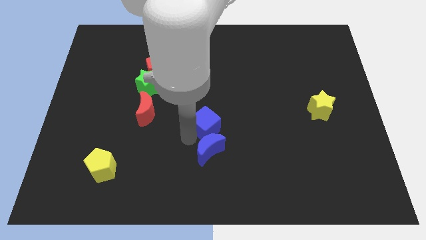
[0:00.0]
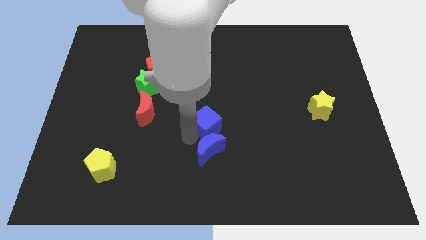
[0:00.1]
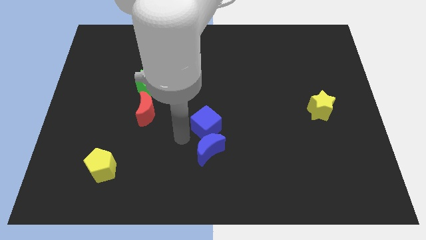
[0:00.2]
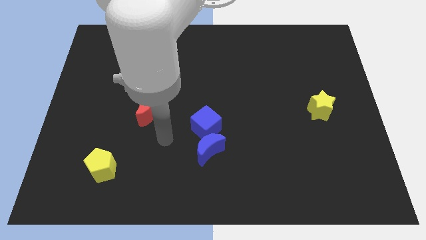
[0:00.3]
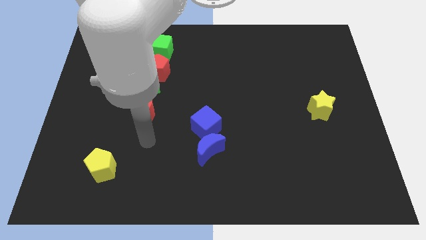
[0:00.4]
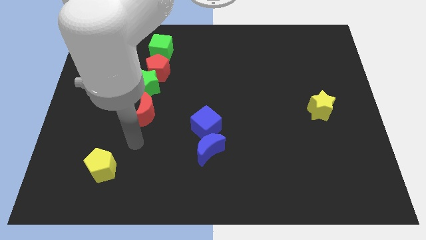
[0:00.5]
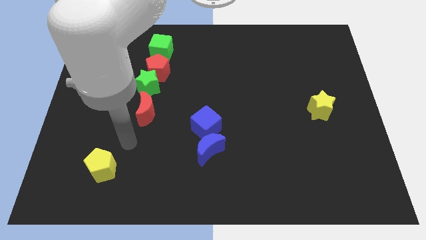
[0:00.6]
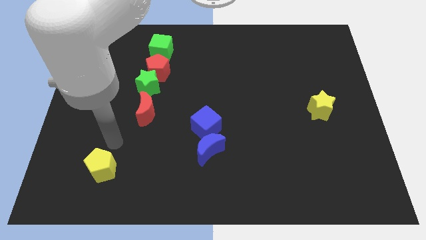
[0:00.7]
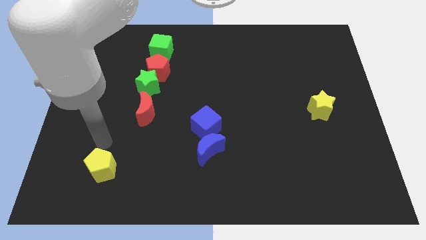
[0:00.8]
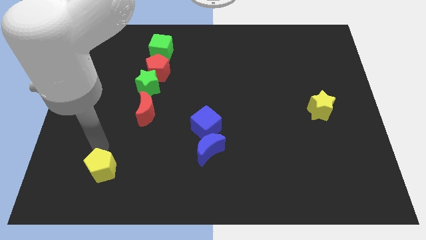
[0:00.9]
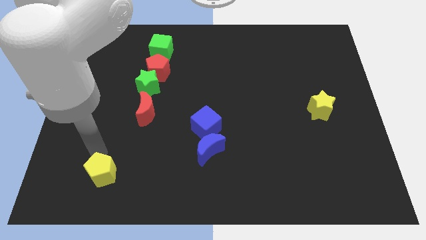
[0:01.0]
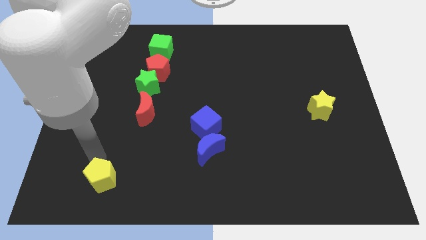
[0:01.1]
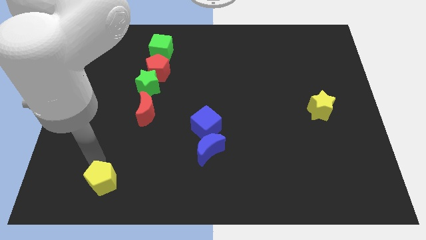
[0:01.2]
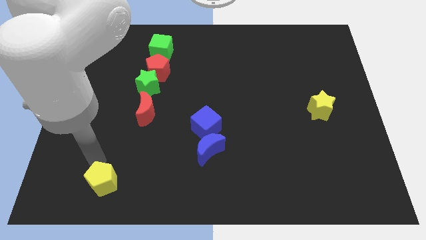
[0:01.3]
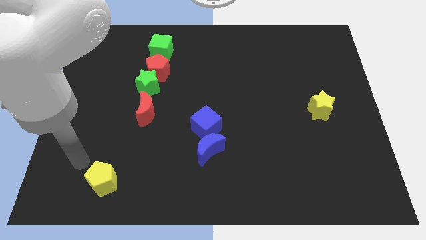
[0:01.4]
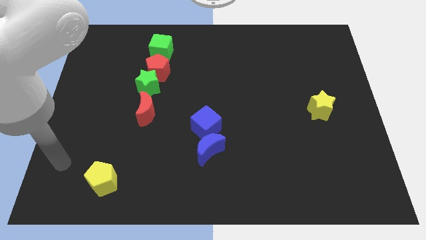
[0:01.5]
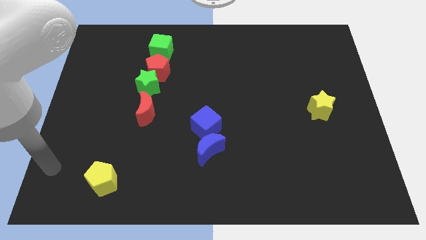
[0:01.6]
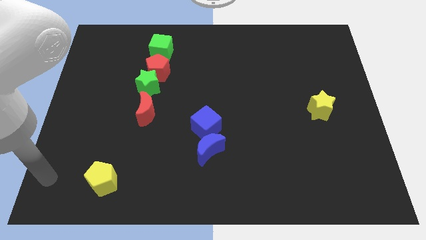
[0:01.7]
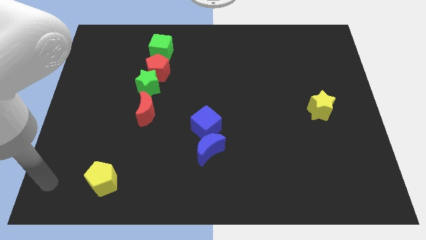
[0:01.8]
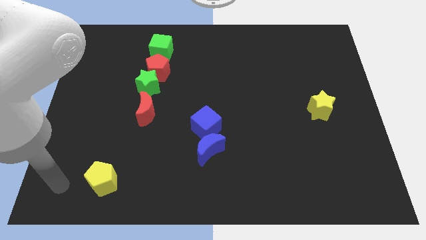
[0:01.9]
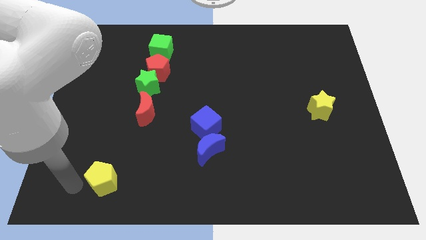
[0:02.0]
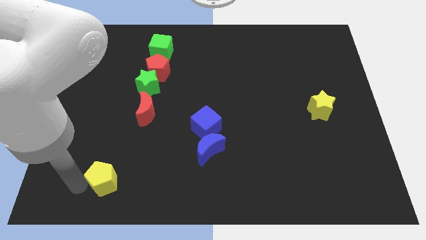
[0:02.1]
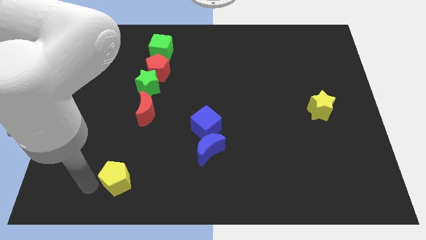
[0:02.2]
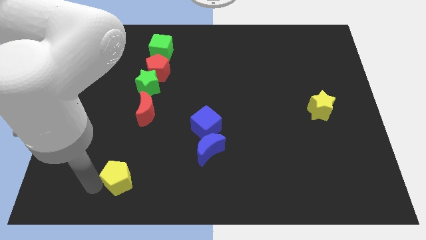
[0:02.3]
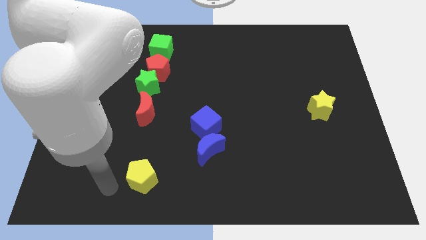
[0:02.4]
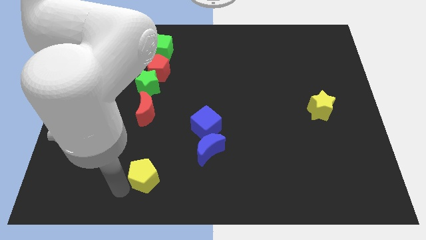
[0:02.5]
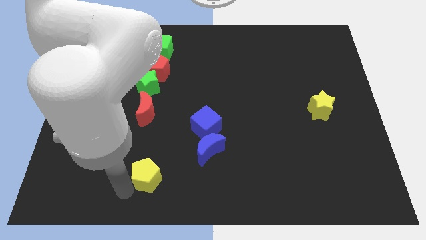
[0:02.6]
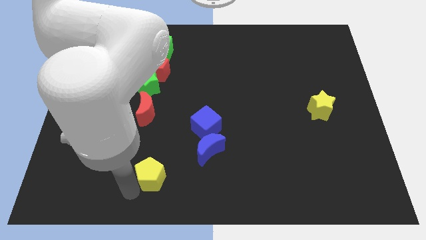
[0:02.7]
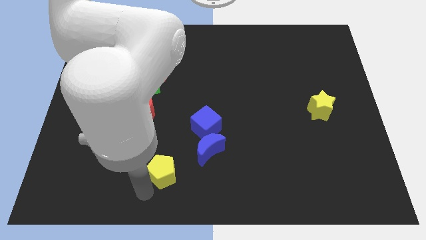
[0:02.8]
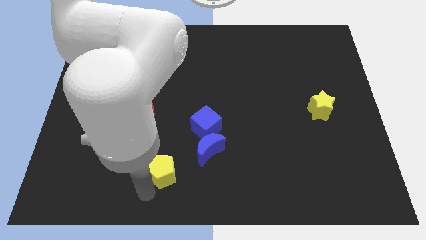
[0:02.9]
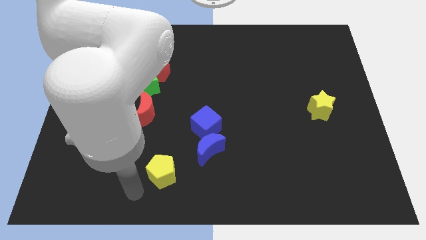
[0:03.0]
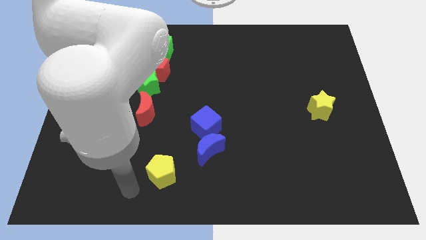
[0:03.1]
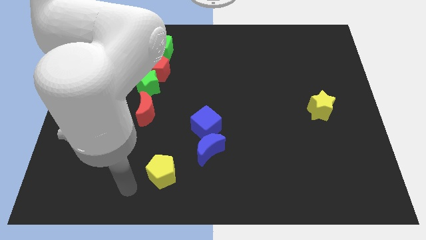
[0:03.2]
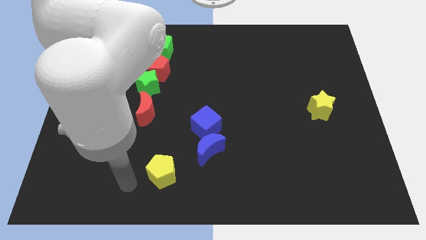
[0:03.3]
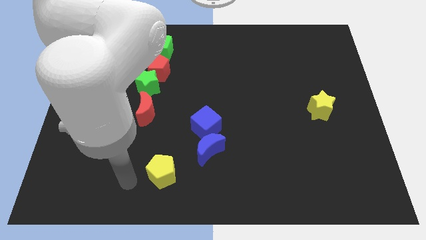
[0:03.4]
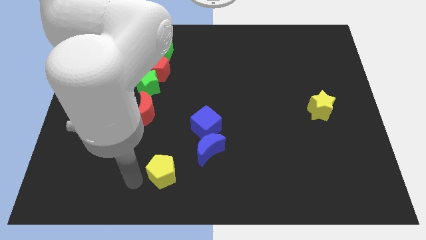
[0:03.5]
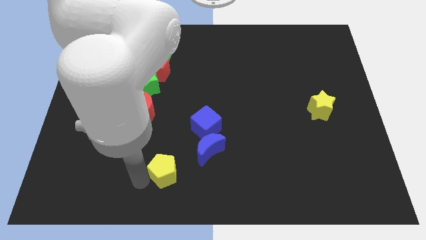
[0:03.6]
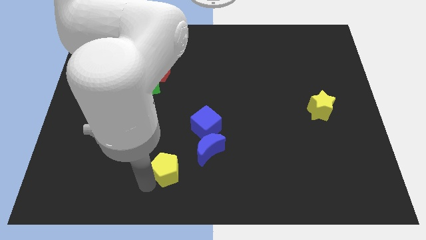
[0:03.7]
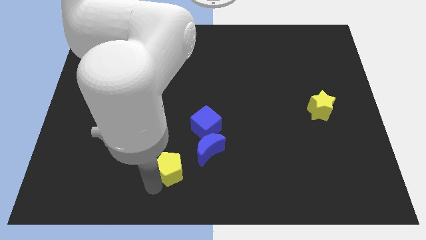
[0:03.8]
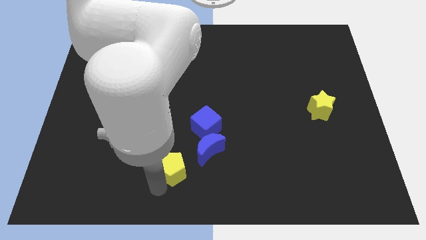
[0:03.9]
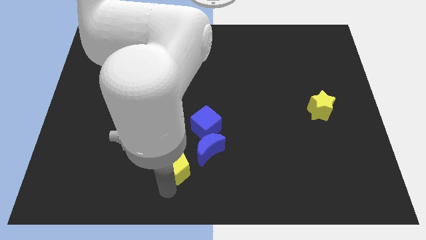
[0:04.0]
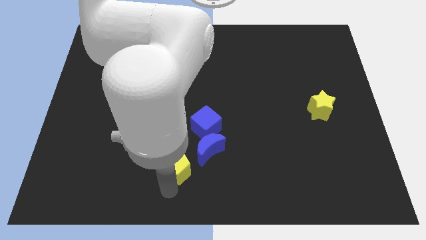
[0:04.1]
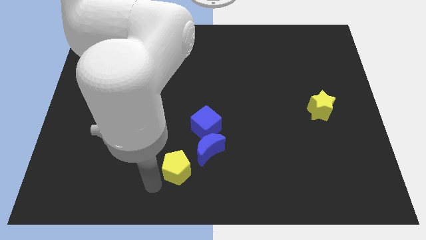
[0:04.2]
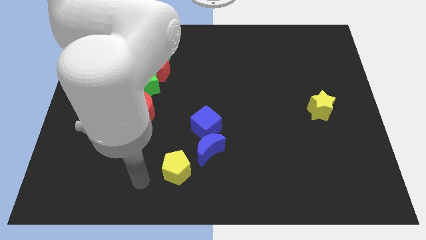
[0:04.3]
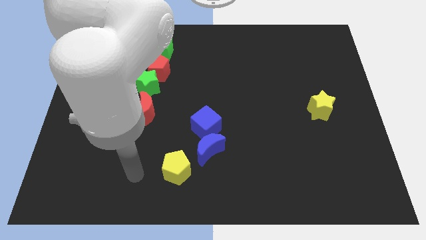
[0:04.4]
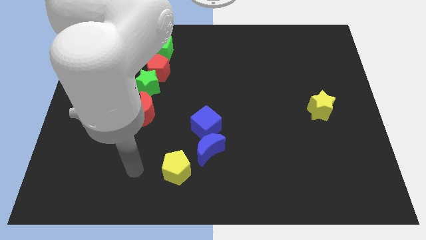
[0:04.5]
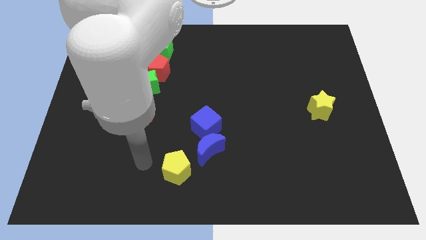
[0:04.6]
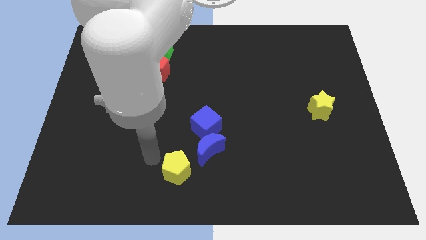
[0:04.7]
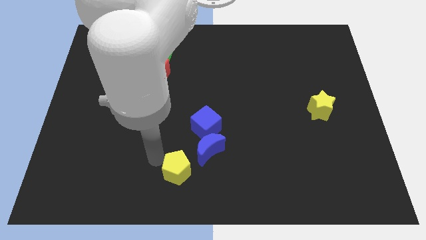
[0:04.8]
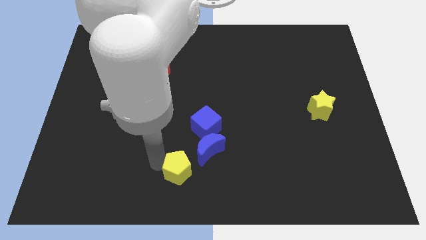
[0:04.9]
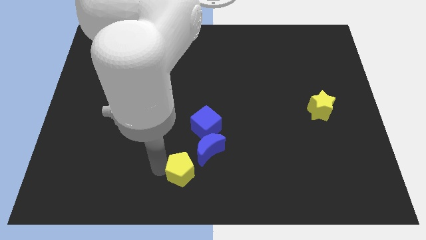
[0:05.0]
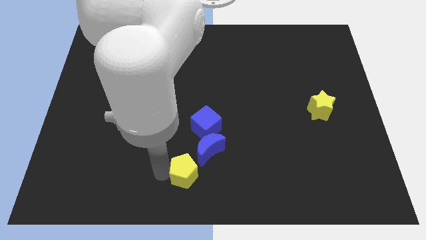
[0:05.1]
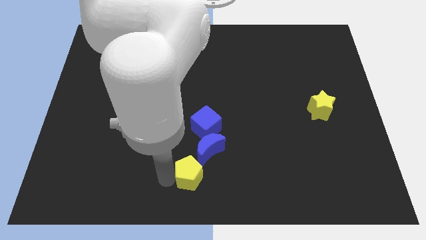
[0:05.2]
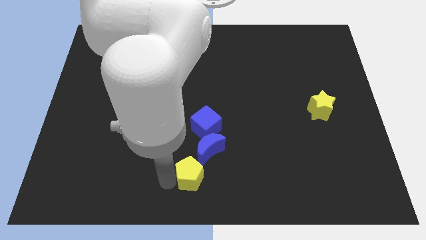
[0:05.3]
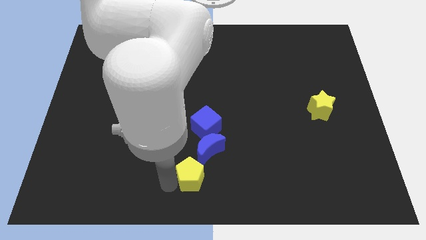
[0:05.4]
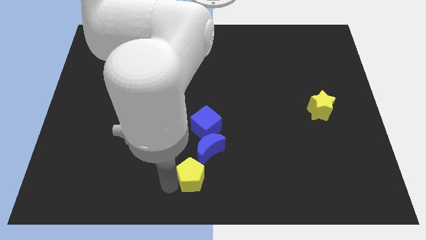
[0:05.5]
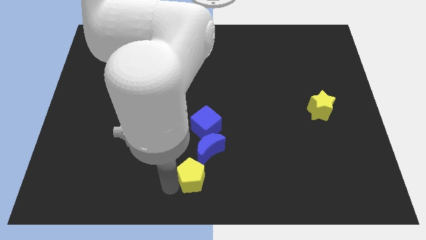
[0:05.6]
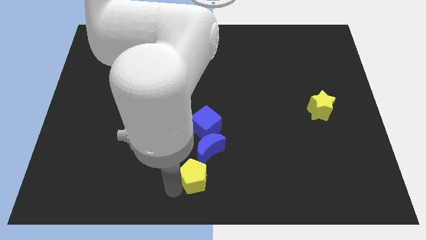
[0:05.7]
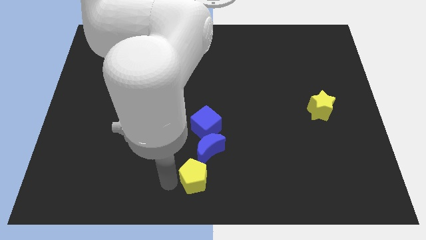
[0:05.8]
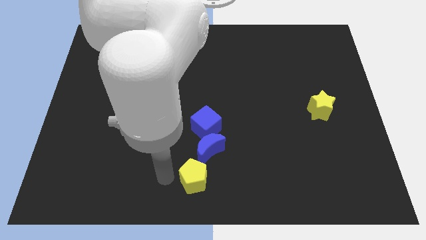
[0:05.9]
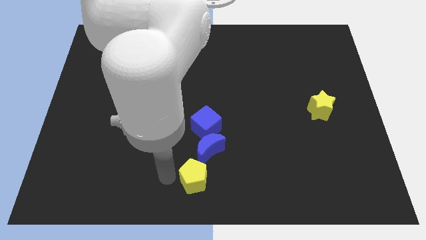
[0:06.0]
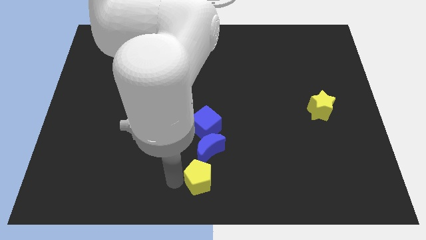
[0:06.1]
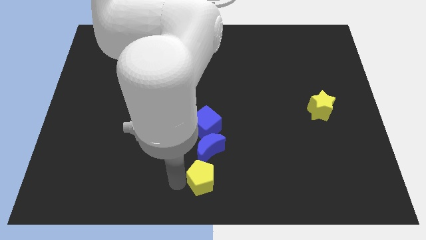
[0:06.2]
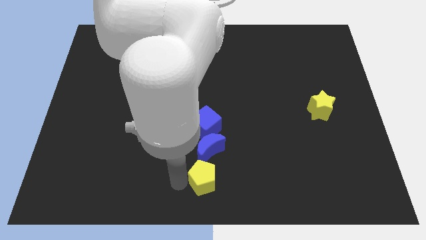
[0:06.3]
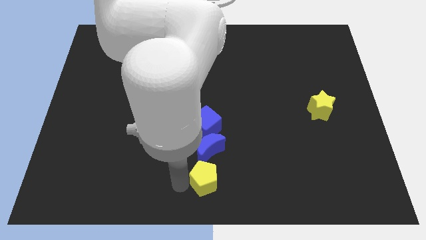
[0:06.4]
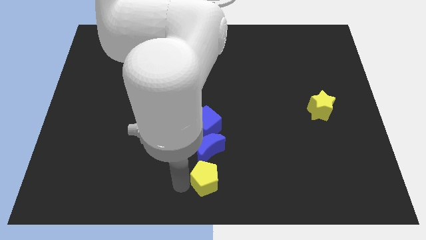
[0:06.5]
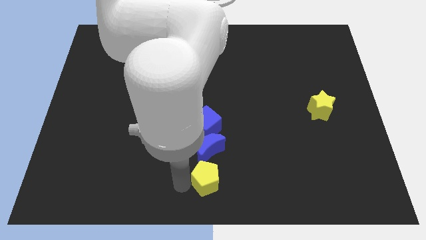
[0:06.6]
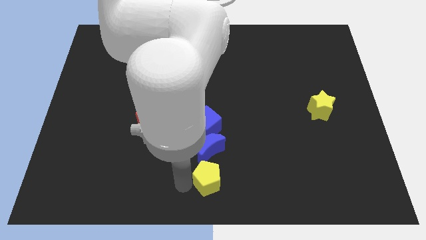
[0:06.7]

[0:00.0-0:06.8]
place the yellow pentagon below the blue moon

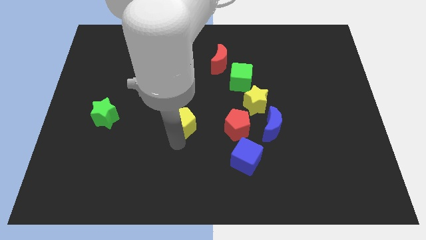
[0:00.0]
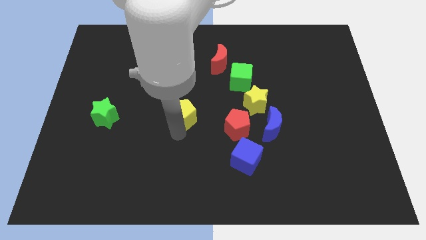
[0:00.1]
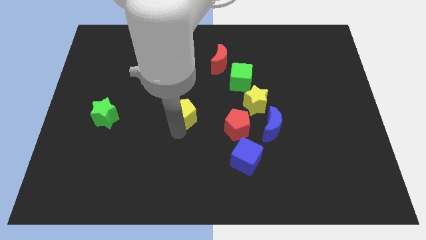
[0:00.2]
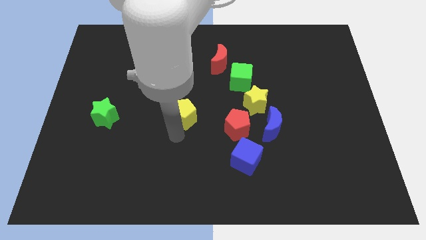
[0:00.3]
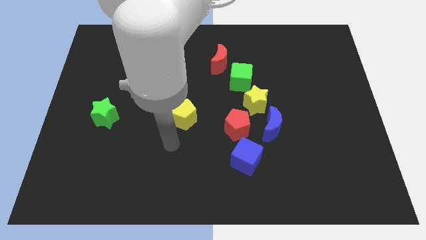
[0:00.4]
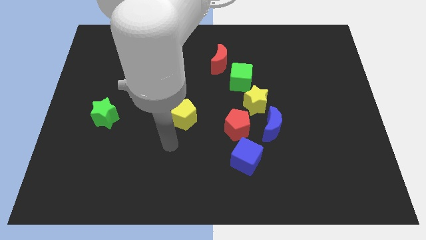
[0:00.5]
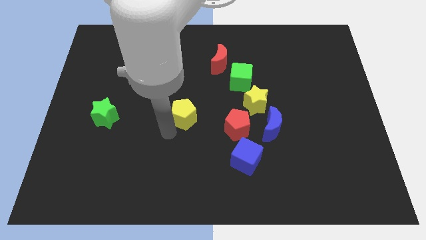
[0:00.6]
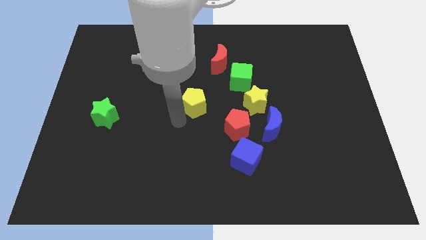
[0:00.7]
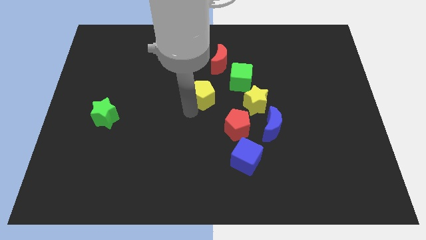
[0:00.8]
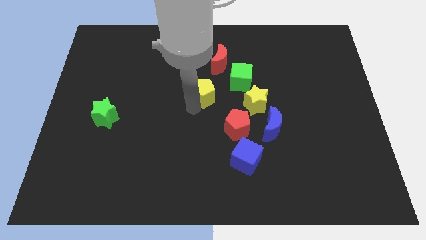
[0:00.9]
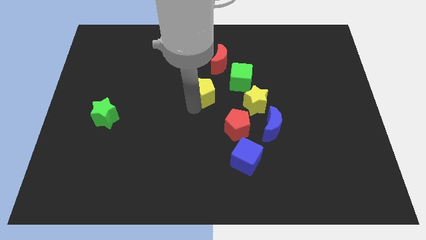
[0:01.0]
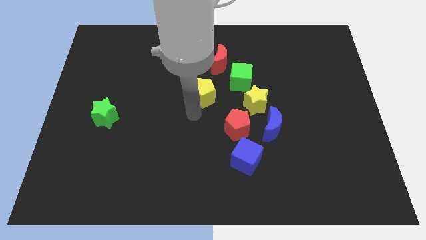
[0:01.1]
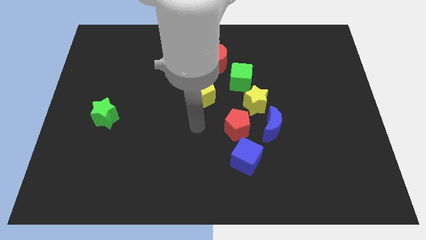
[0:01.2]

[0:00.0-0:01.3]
place the yellow pentagon at the center of the board

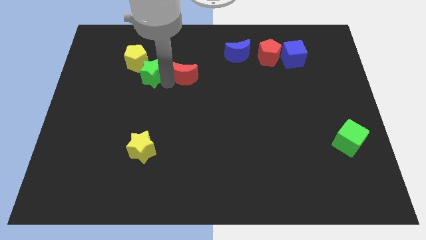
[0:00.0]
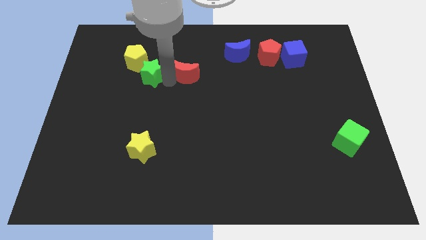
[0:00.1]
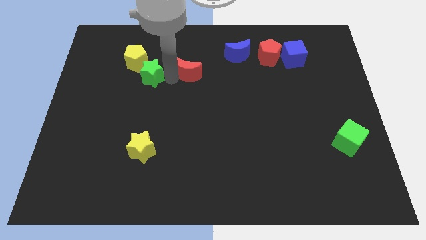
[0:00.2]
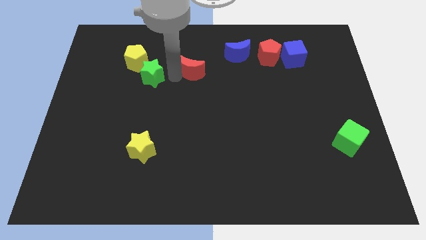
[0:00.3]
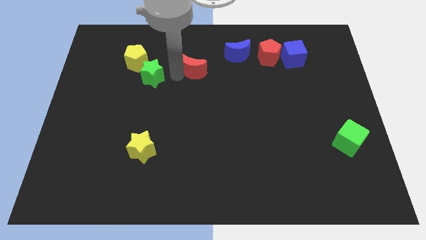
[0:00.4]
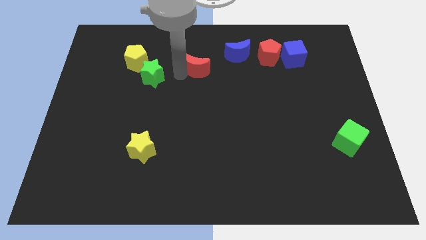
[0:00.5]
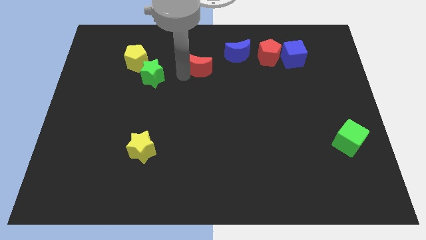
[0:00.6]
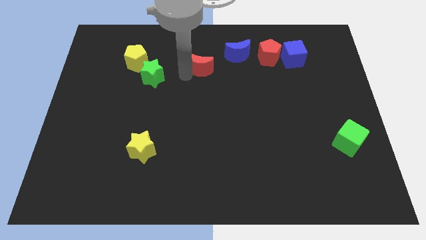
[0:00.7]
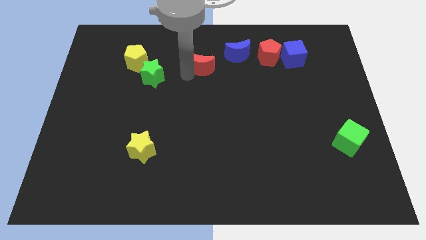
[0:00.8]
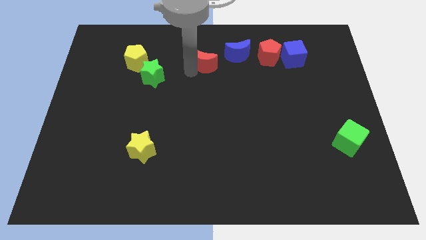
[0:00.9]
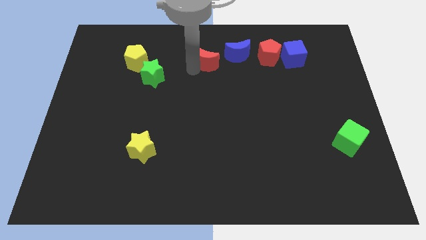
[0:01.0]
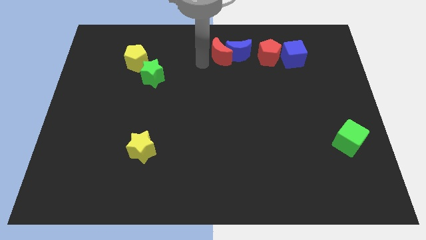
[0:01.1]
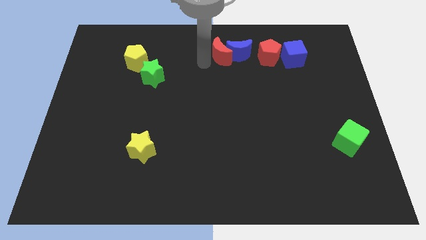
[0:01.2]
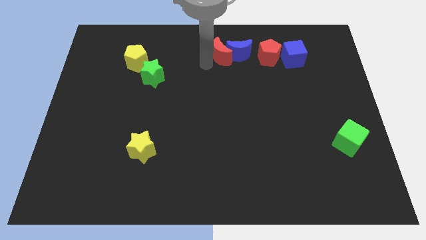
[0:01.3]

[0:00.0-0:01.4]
push the red crescent into blue crescent
